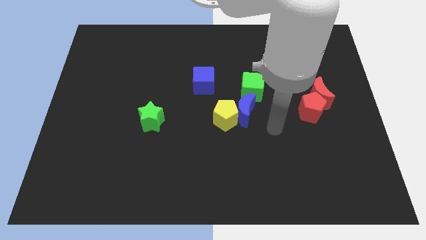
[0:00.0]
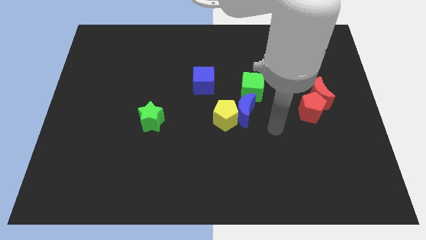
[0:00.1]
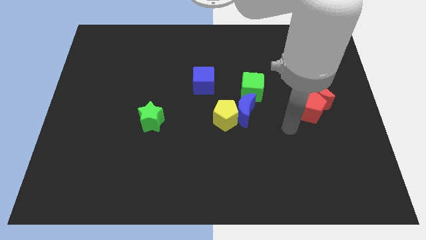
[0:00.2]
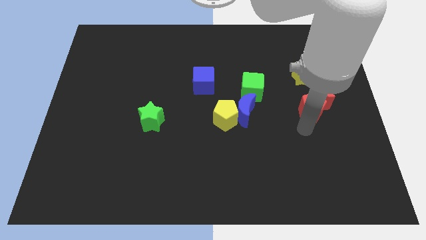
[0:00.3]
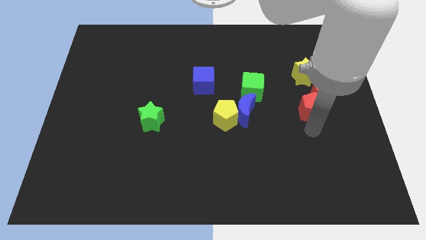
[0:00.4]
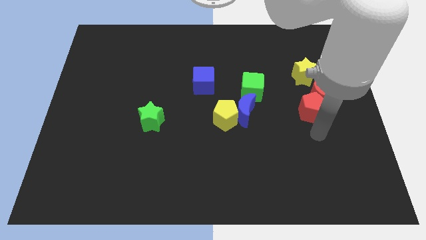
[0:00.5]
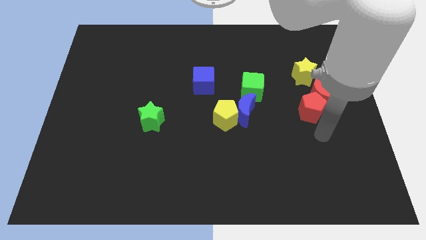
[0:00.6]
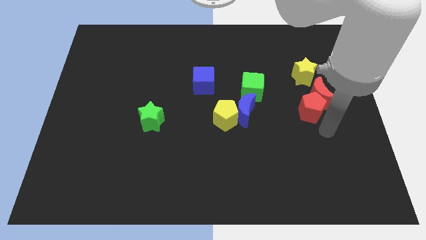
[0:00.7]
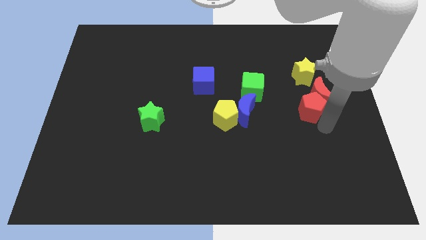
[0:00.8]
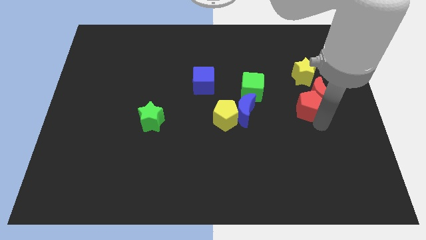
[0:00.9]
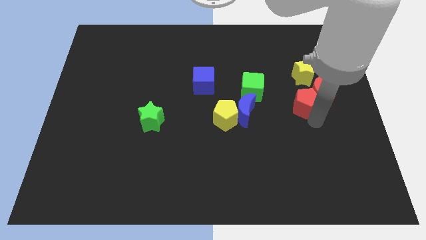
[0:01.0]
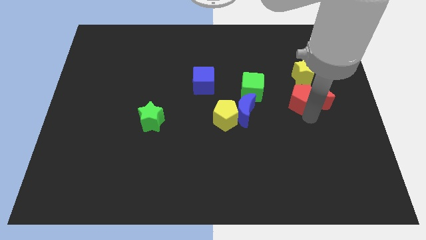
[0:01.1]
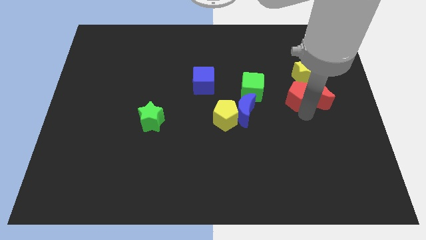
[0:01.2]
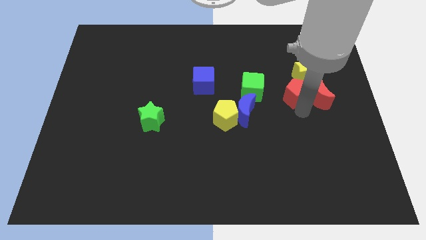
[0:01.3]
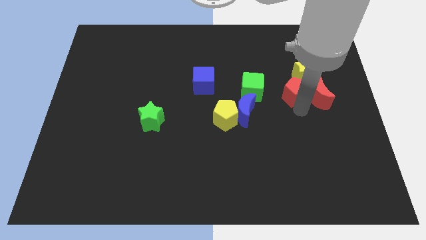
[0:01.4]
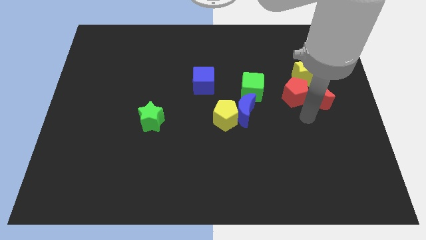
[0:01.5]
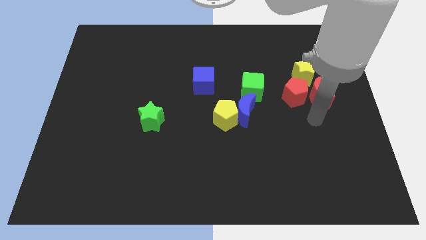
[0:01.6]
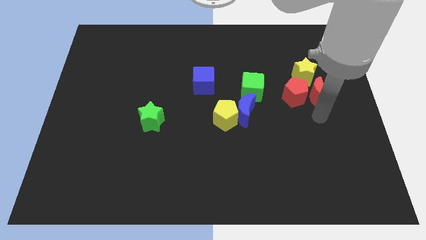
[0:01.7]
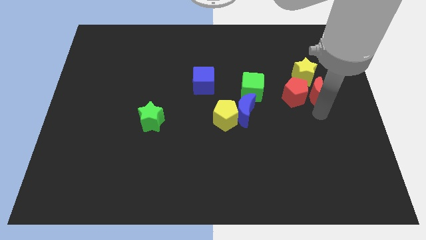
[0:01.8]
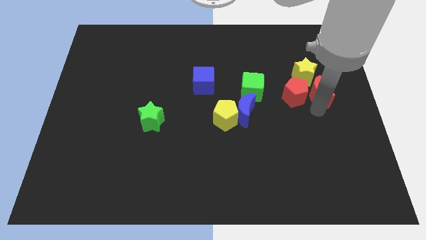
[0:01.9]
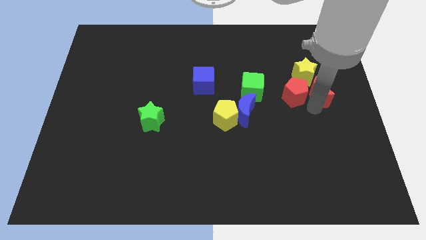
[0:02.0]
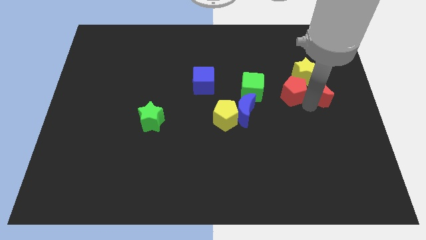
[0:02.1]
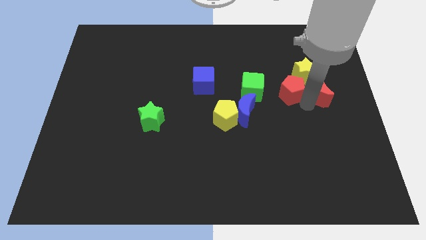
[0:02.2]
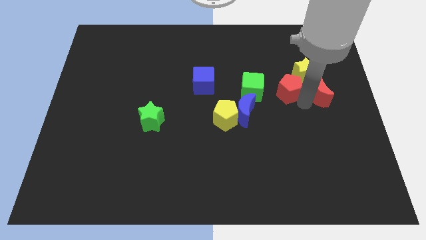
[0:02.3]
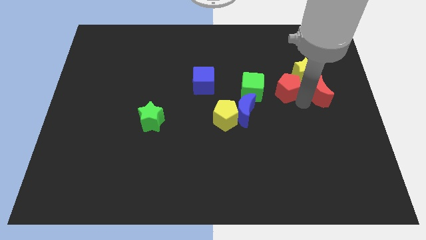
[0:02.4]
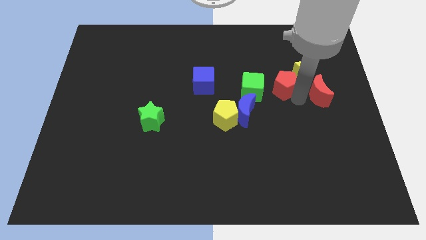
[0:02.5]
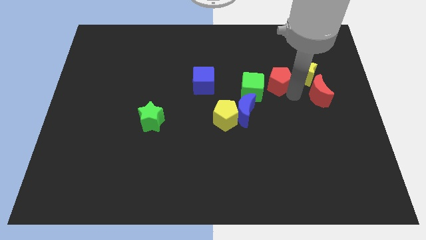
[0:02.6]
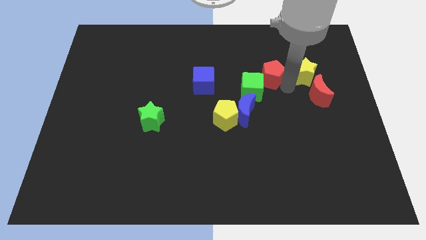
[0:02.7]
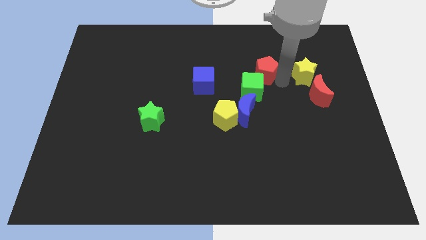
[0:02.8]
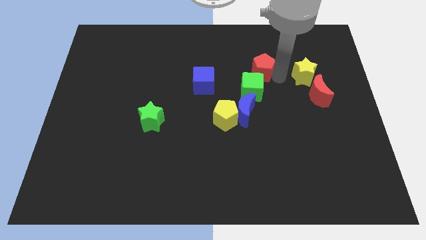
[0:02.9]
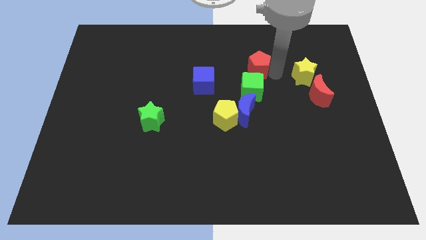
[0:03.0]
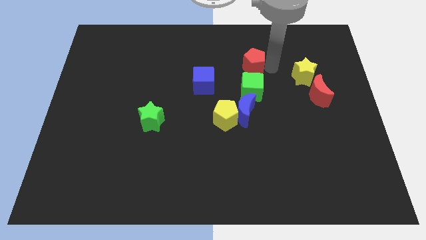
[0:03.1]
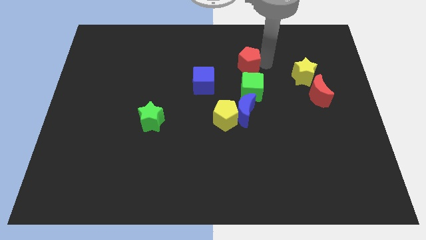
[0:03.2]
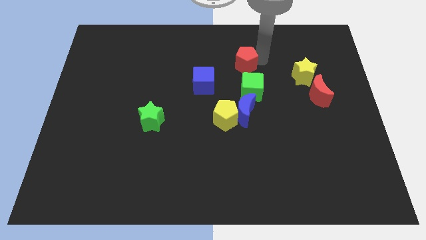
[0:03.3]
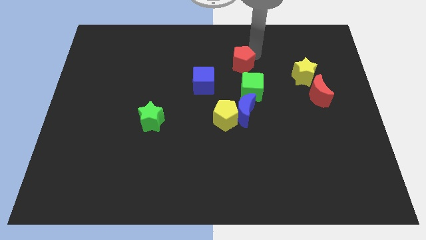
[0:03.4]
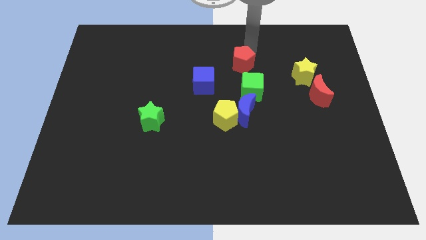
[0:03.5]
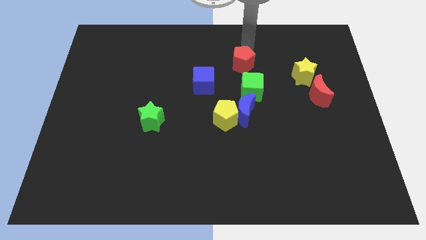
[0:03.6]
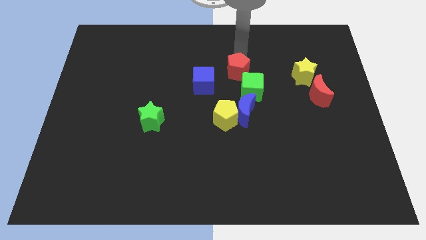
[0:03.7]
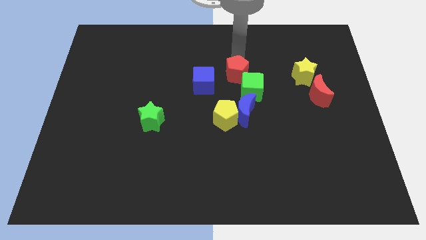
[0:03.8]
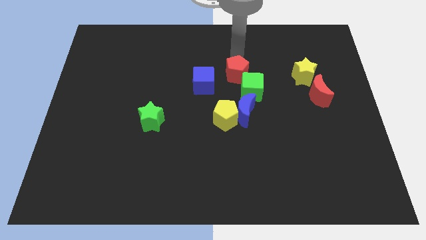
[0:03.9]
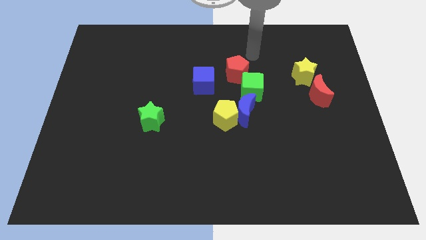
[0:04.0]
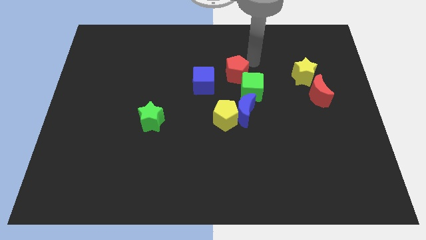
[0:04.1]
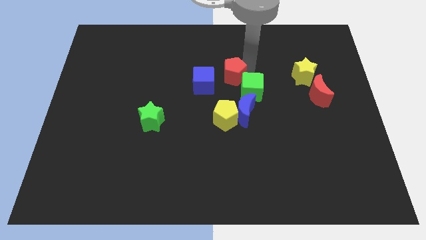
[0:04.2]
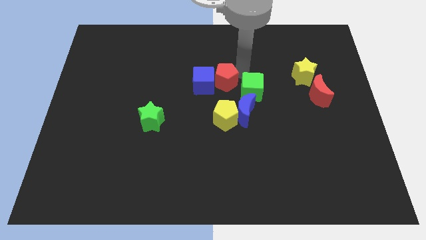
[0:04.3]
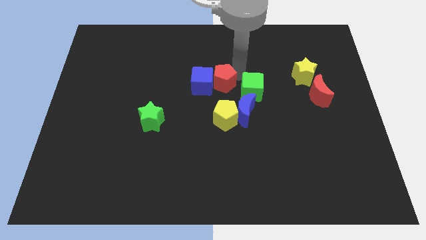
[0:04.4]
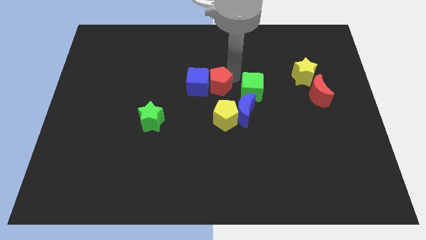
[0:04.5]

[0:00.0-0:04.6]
move the red pentagon close to the blue cube

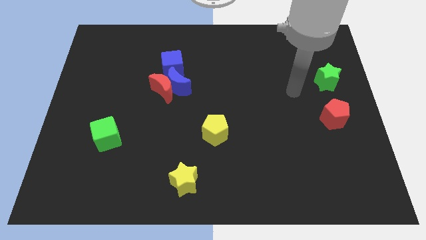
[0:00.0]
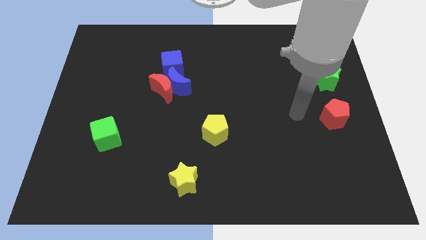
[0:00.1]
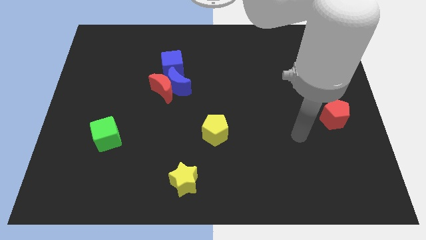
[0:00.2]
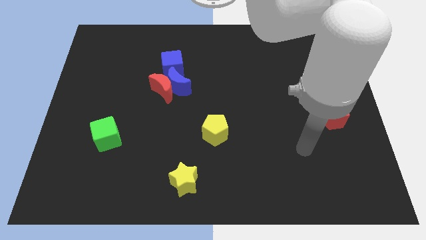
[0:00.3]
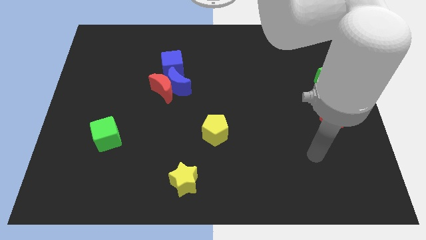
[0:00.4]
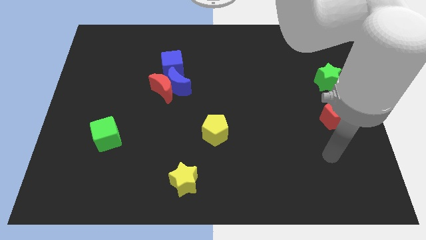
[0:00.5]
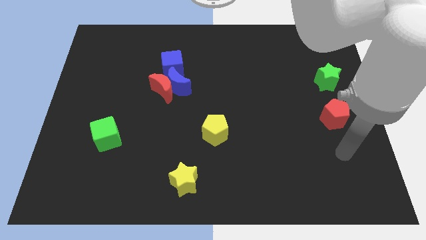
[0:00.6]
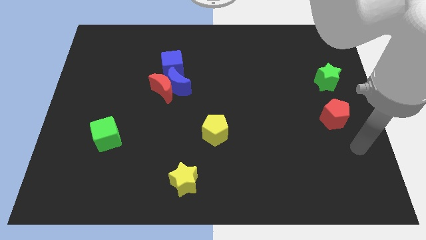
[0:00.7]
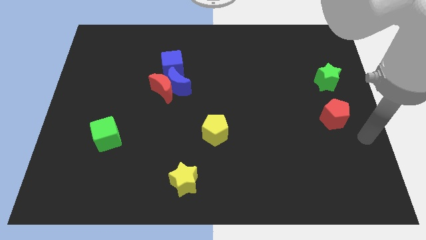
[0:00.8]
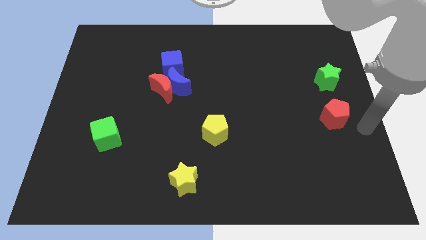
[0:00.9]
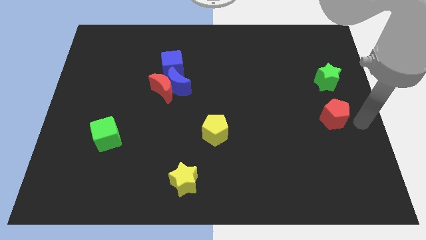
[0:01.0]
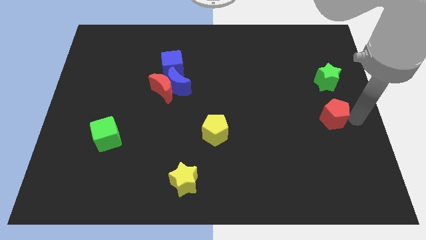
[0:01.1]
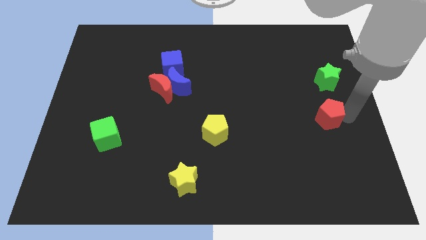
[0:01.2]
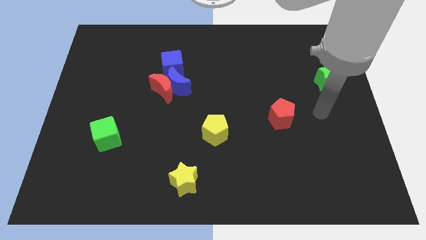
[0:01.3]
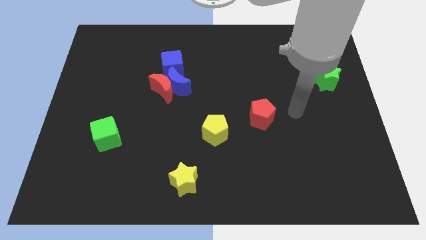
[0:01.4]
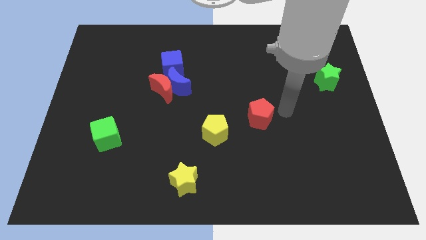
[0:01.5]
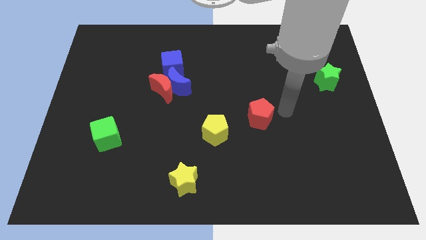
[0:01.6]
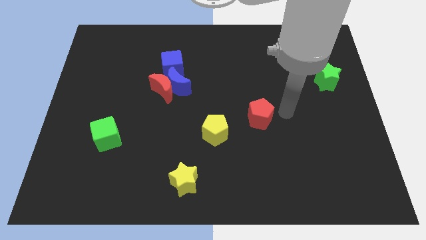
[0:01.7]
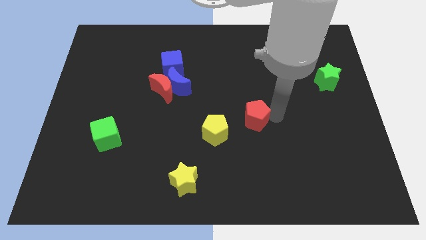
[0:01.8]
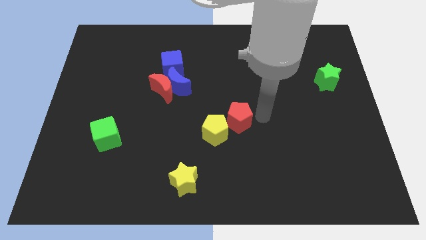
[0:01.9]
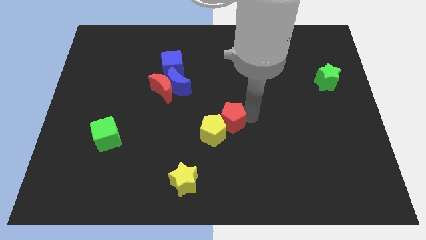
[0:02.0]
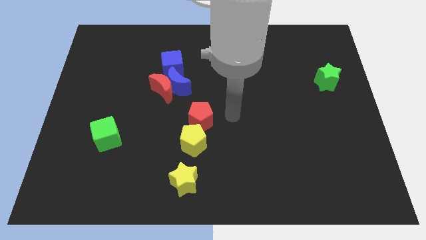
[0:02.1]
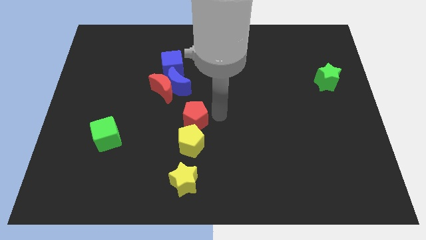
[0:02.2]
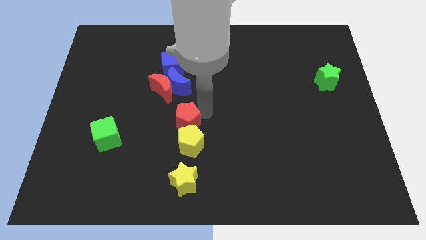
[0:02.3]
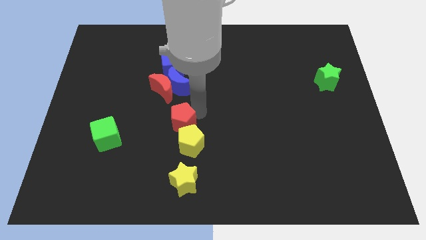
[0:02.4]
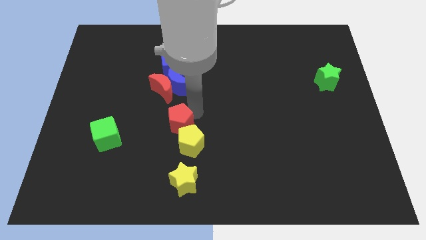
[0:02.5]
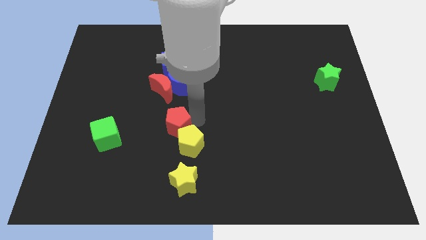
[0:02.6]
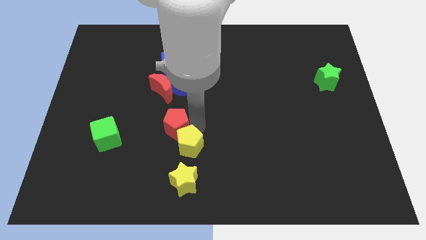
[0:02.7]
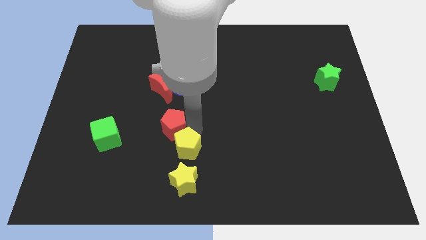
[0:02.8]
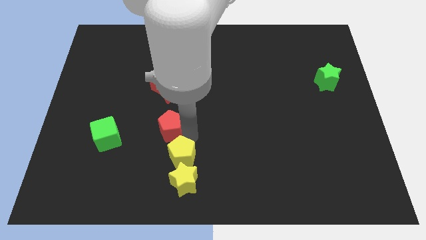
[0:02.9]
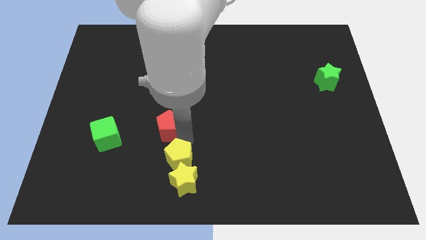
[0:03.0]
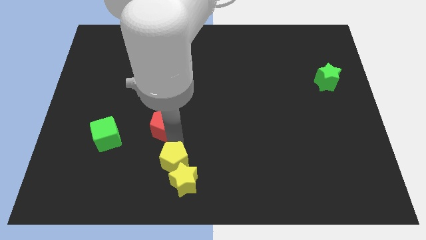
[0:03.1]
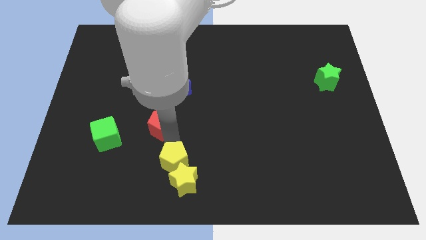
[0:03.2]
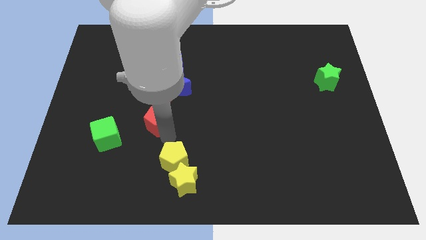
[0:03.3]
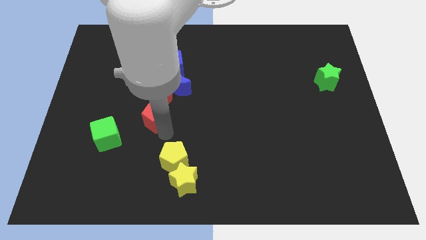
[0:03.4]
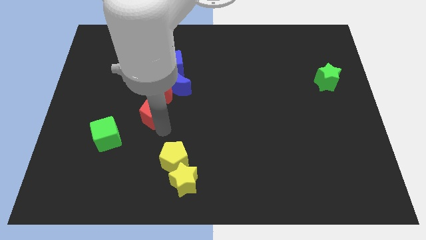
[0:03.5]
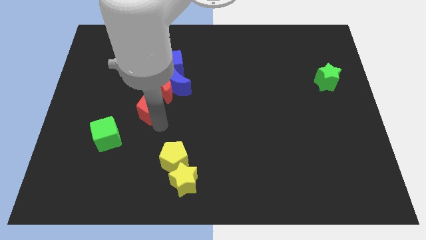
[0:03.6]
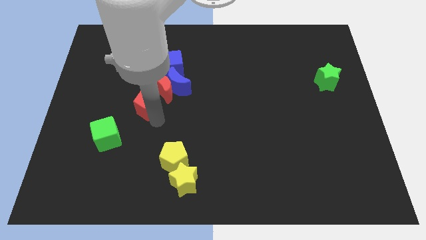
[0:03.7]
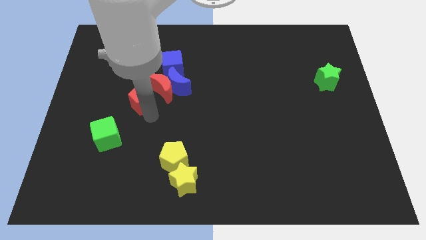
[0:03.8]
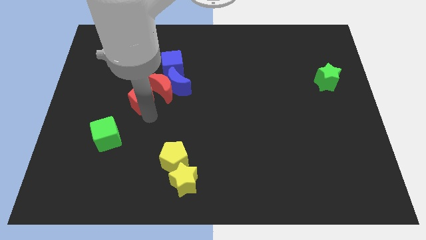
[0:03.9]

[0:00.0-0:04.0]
move the red pentagon to the red moon

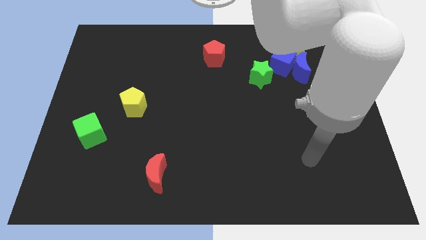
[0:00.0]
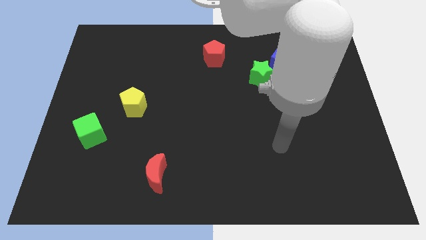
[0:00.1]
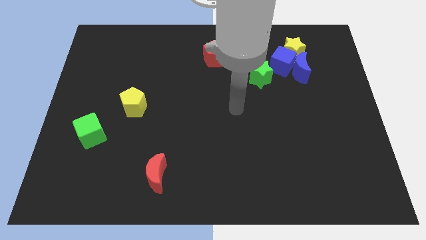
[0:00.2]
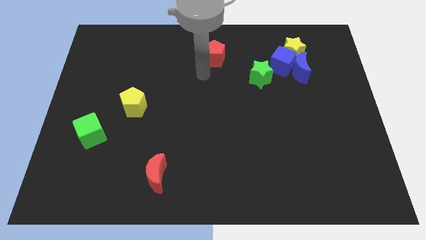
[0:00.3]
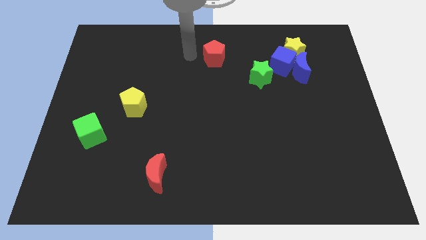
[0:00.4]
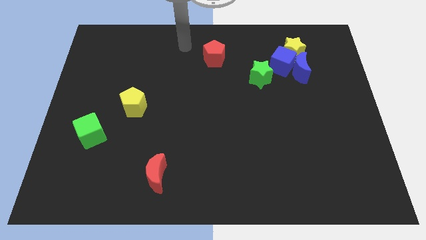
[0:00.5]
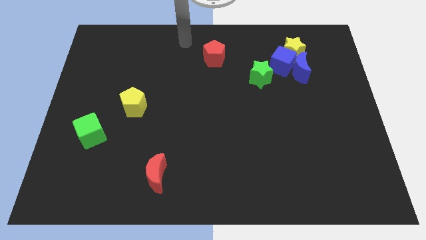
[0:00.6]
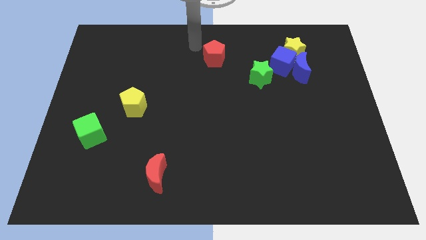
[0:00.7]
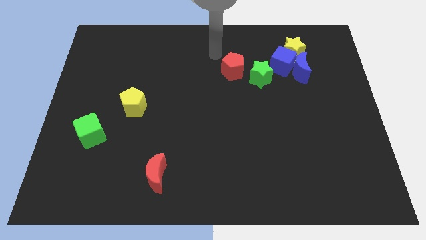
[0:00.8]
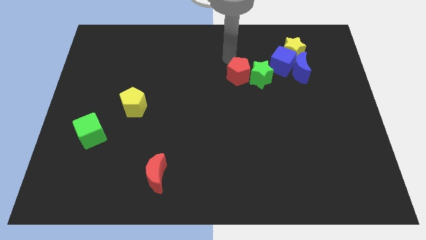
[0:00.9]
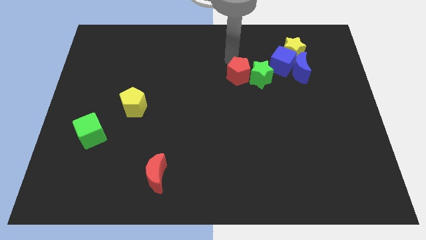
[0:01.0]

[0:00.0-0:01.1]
slide the red pentagon next to the green star
